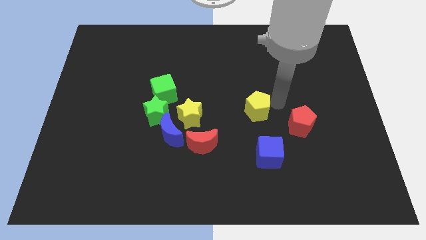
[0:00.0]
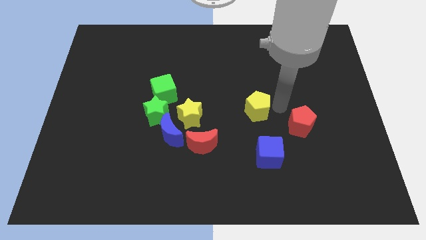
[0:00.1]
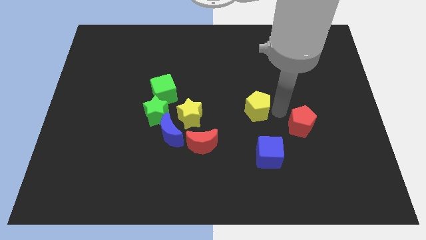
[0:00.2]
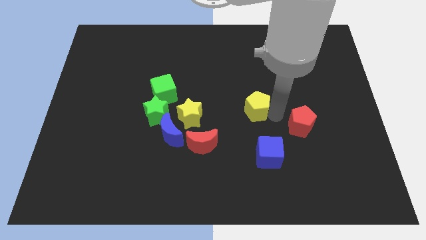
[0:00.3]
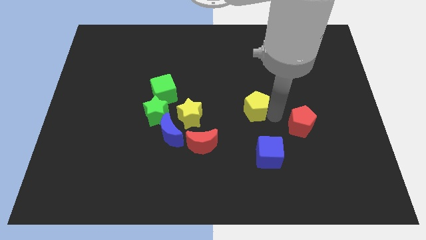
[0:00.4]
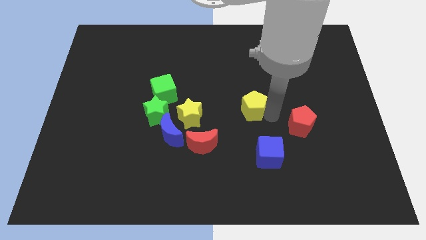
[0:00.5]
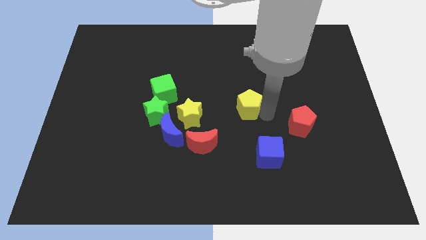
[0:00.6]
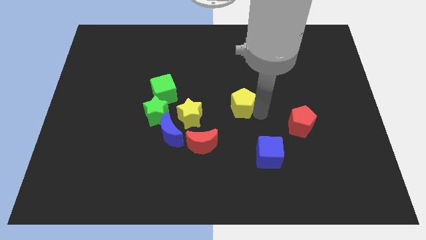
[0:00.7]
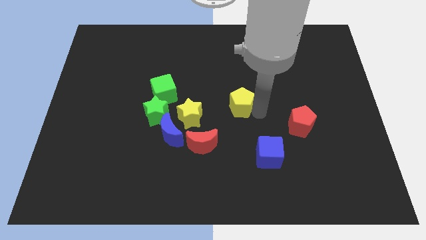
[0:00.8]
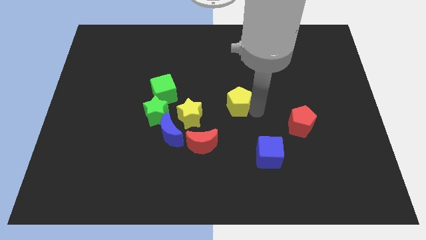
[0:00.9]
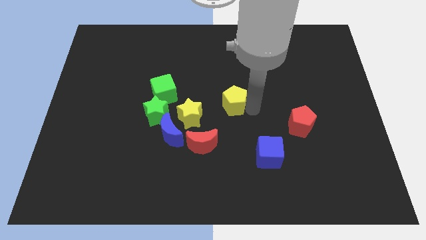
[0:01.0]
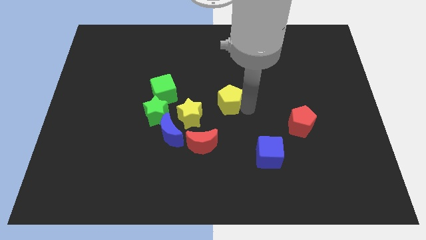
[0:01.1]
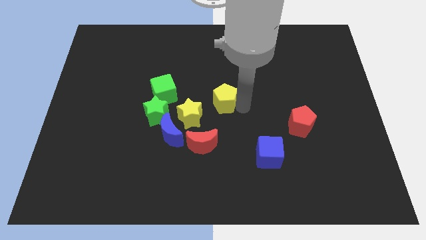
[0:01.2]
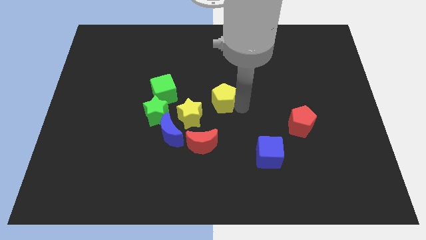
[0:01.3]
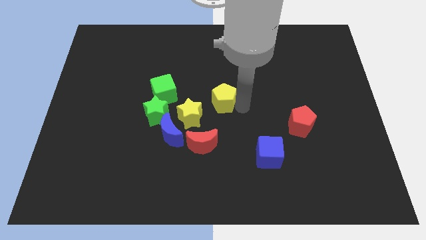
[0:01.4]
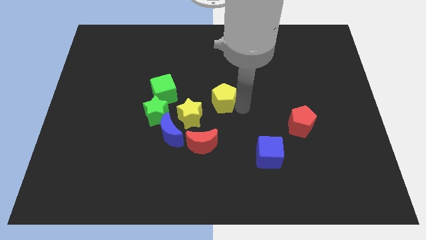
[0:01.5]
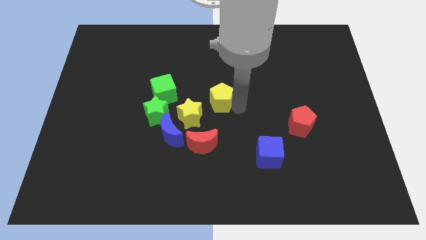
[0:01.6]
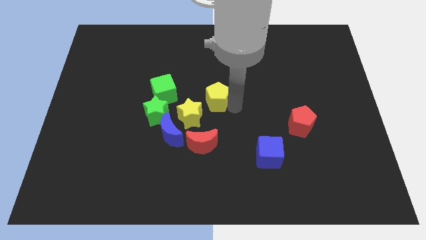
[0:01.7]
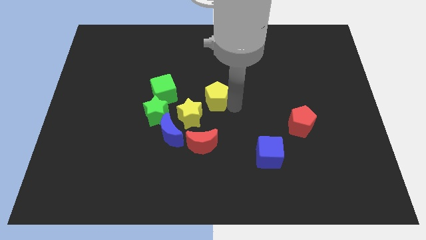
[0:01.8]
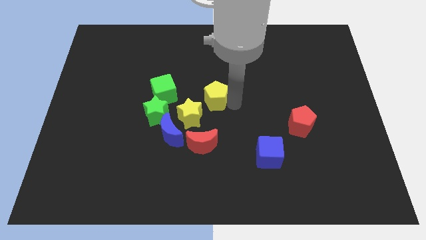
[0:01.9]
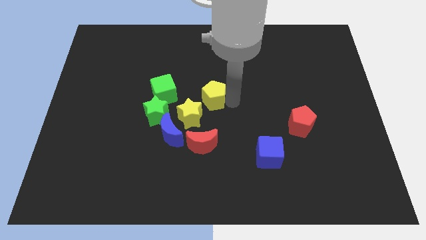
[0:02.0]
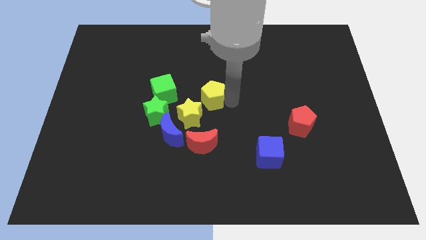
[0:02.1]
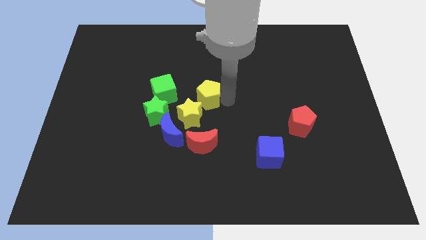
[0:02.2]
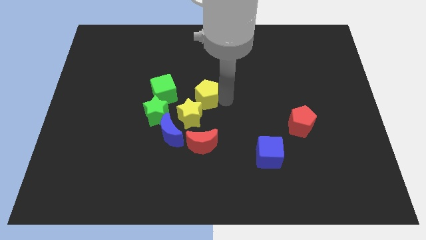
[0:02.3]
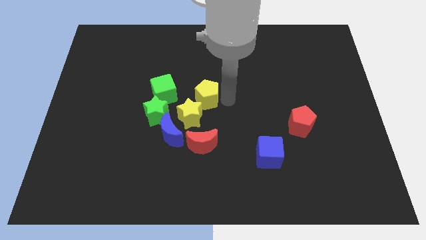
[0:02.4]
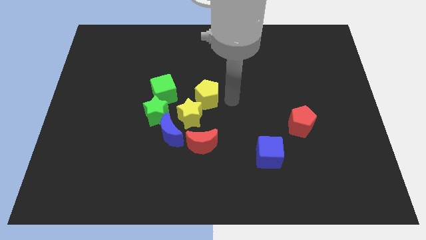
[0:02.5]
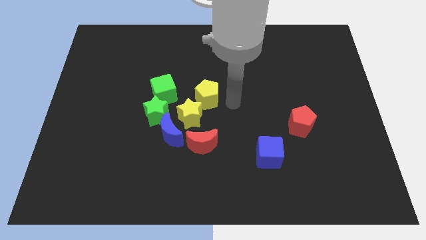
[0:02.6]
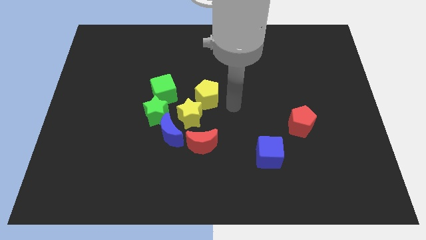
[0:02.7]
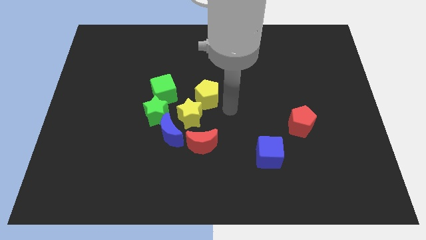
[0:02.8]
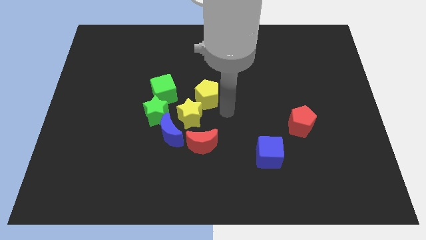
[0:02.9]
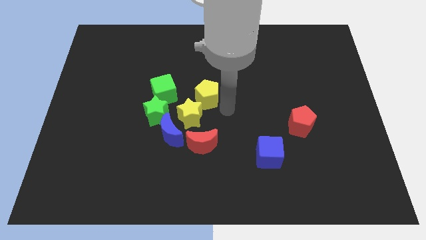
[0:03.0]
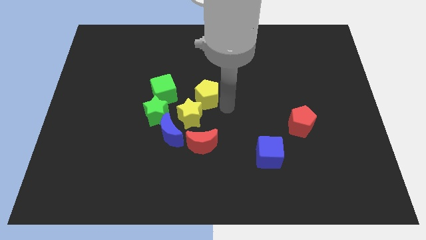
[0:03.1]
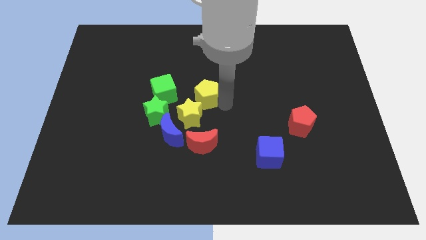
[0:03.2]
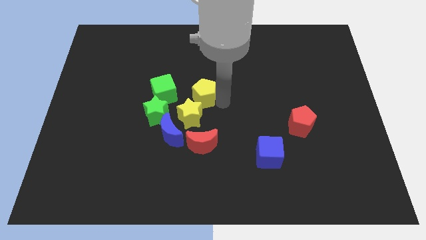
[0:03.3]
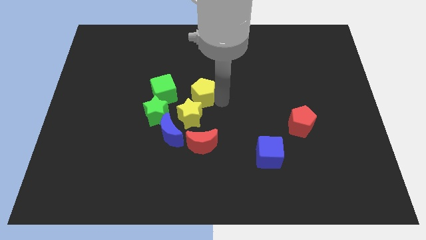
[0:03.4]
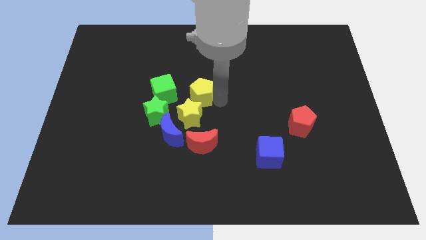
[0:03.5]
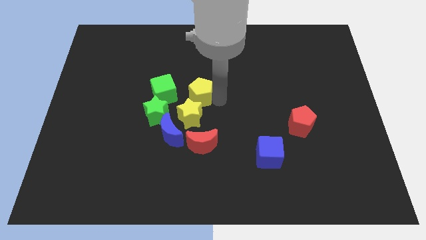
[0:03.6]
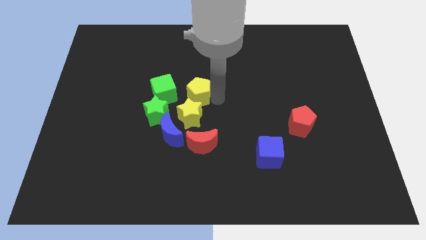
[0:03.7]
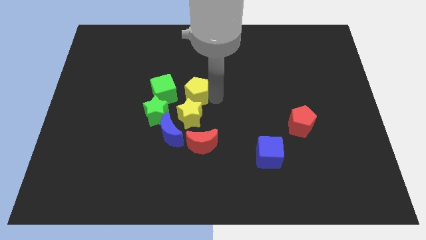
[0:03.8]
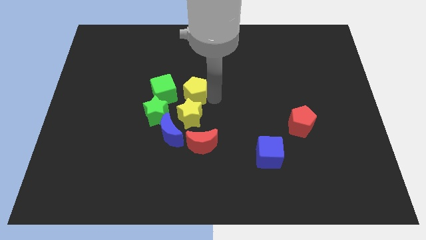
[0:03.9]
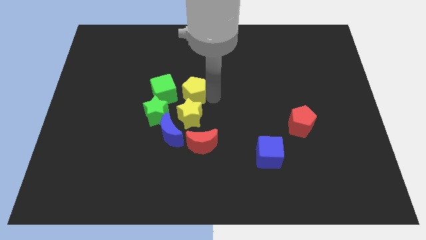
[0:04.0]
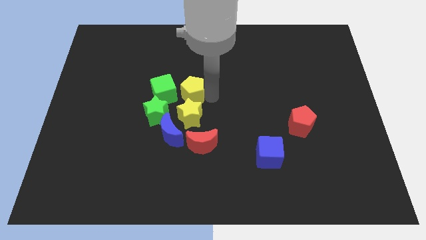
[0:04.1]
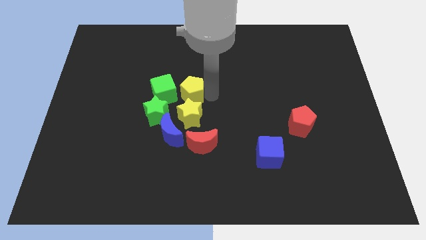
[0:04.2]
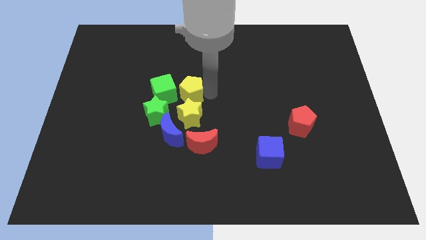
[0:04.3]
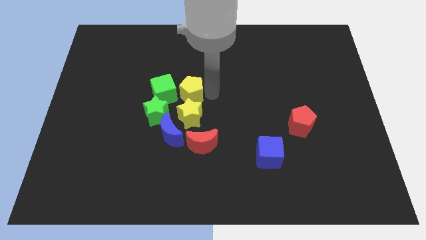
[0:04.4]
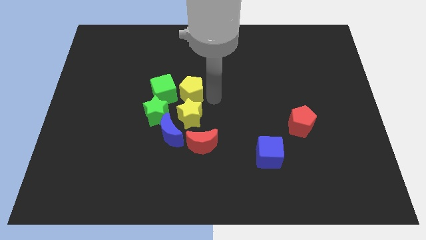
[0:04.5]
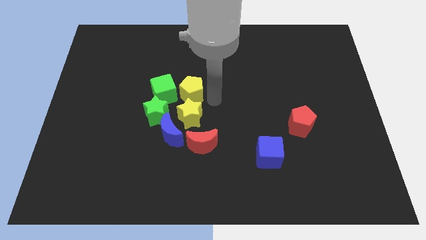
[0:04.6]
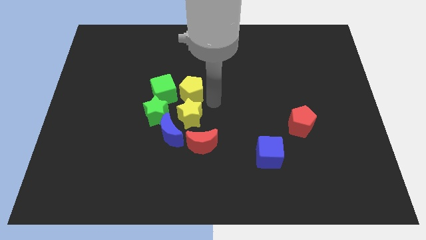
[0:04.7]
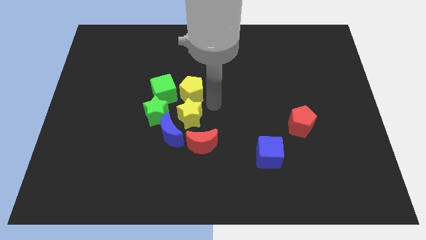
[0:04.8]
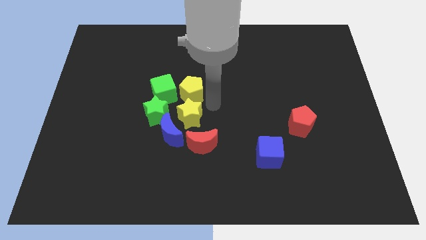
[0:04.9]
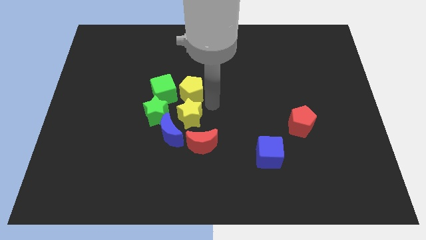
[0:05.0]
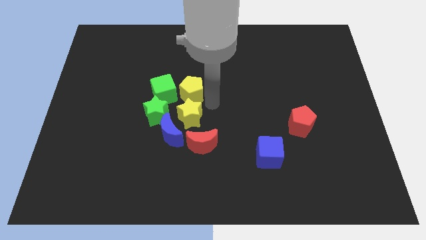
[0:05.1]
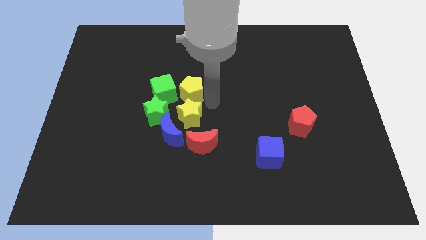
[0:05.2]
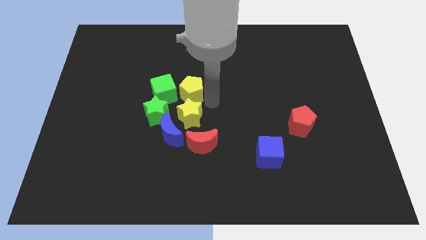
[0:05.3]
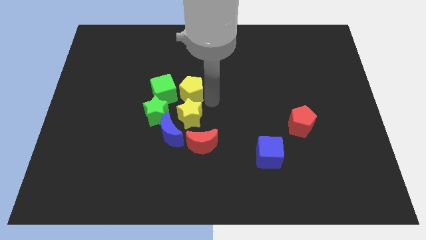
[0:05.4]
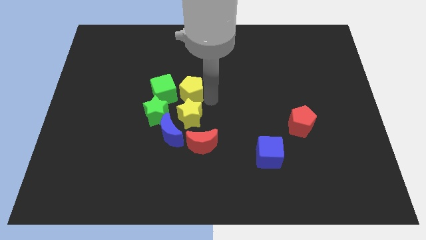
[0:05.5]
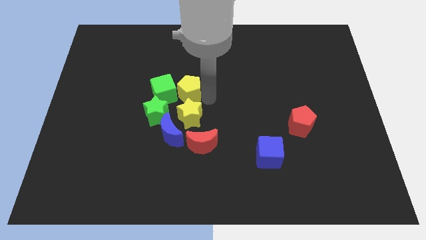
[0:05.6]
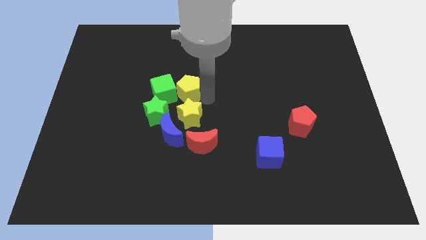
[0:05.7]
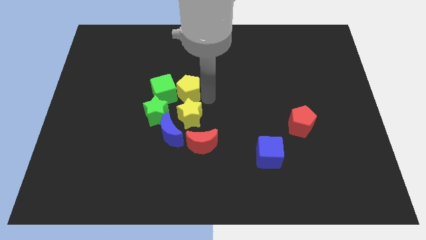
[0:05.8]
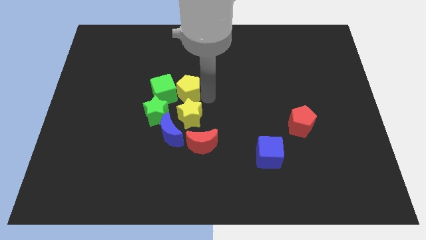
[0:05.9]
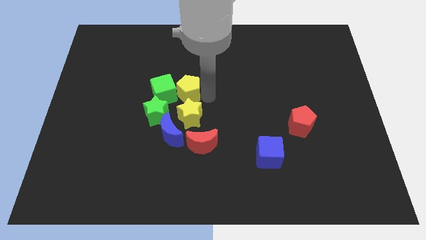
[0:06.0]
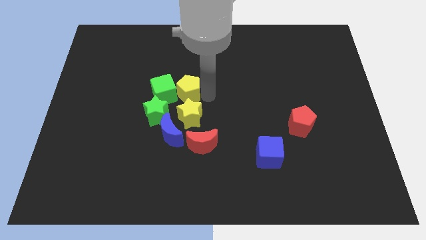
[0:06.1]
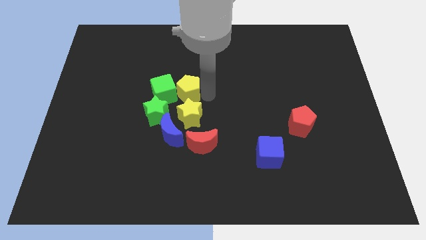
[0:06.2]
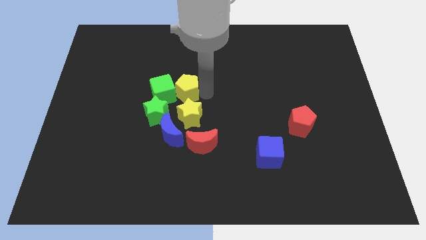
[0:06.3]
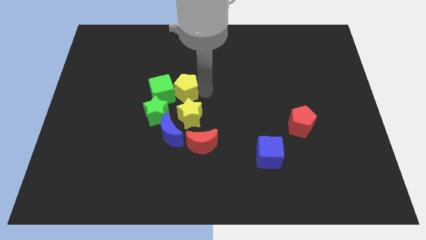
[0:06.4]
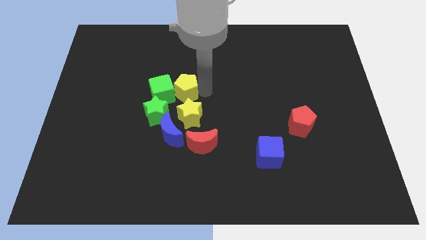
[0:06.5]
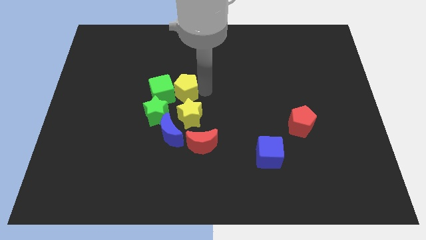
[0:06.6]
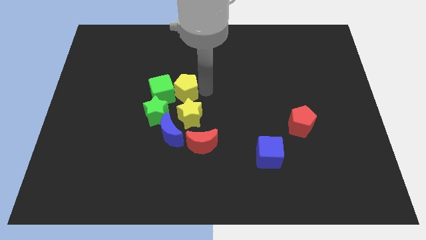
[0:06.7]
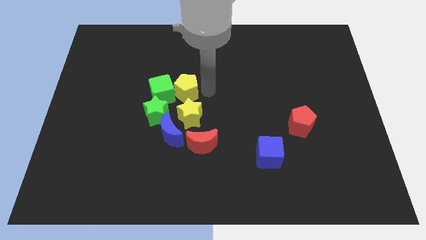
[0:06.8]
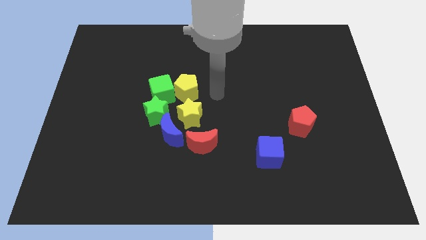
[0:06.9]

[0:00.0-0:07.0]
move the yellow pentagon into the right of the green cube

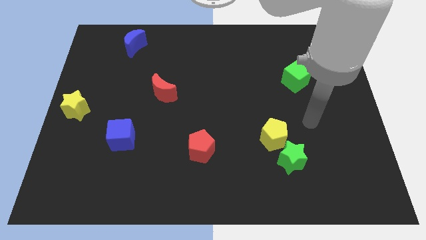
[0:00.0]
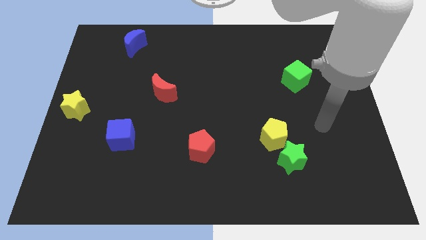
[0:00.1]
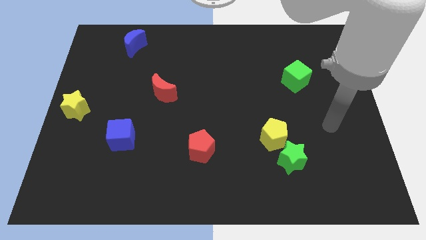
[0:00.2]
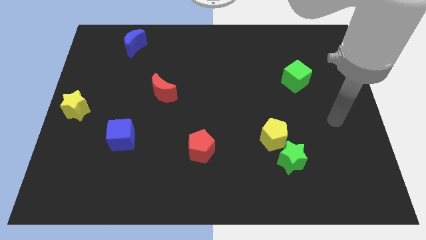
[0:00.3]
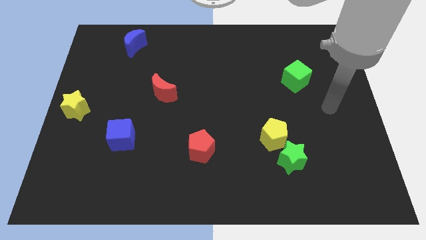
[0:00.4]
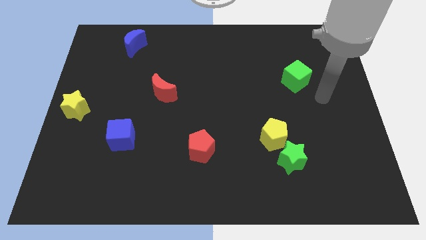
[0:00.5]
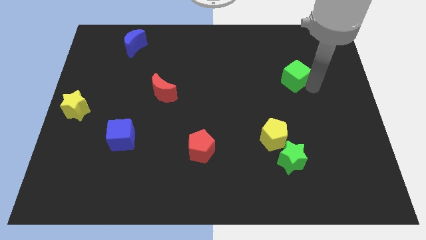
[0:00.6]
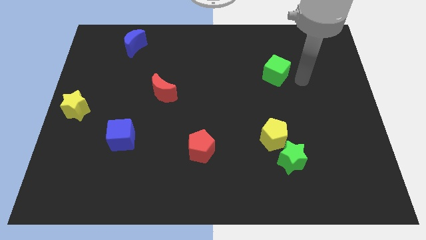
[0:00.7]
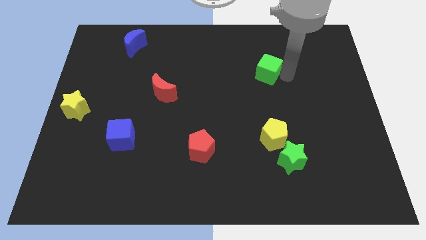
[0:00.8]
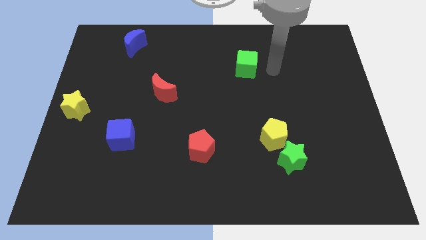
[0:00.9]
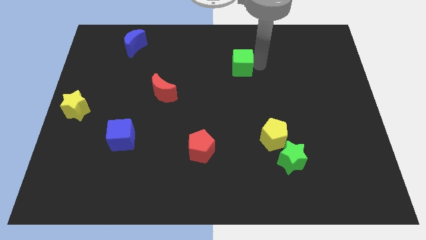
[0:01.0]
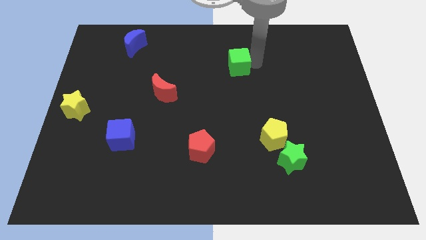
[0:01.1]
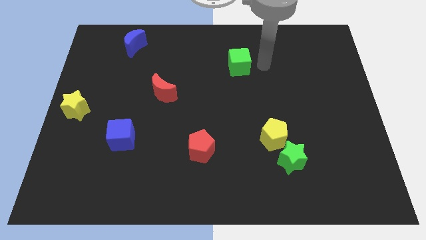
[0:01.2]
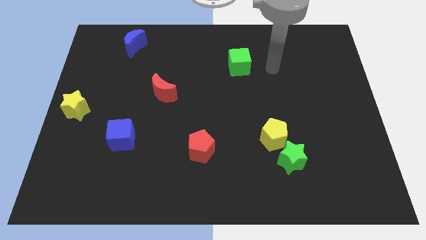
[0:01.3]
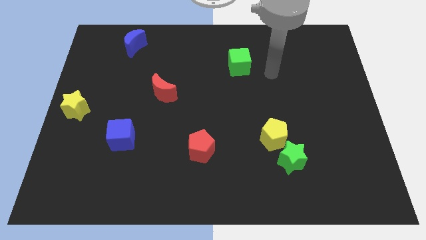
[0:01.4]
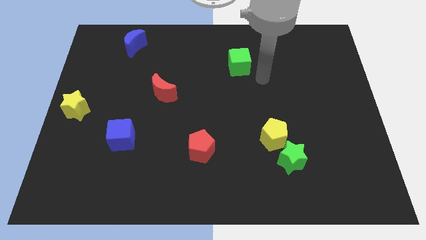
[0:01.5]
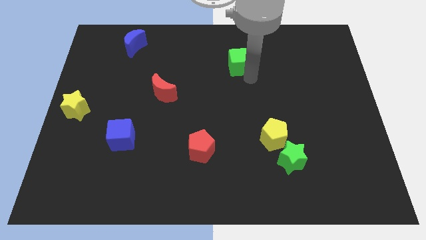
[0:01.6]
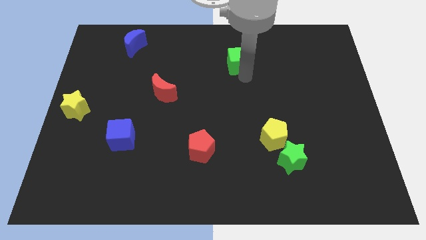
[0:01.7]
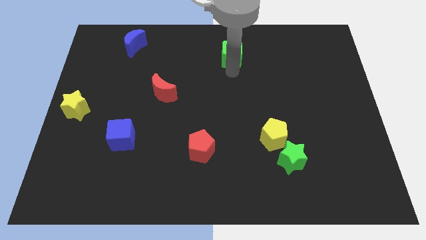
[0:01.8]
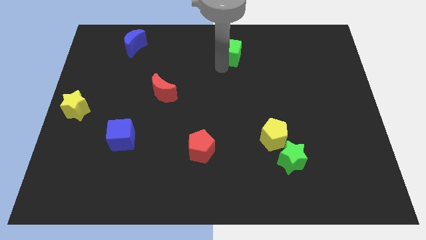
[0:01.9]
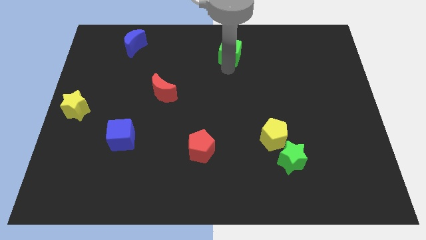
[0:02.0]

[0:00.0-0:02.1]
push green cube towards top center
